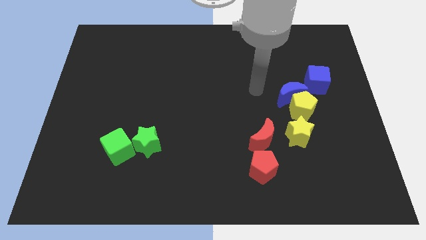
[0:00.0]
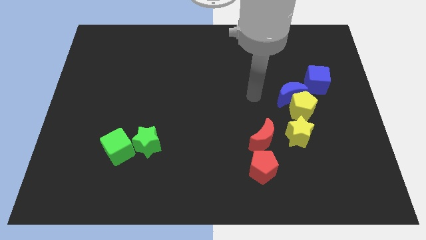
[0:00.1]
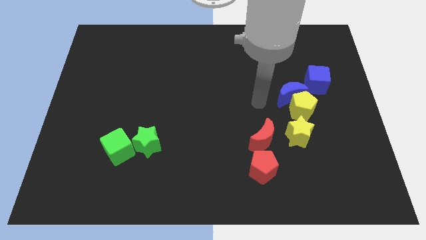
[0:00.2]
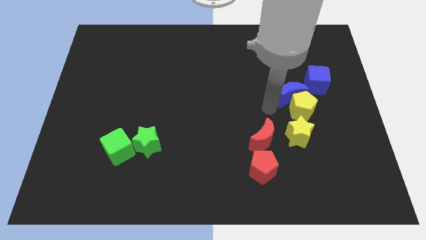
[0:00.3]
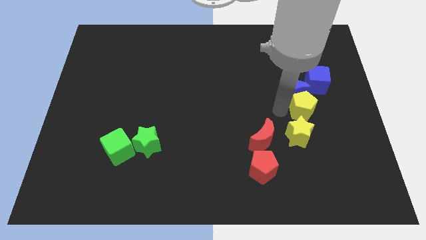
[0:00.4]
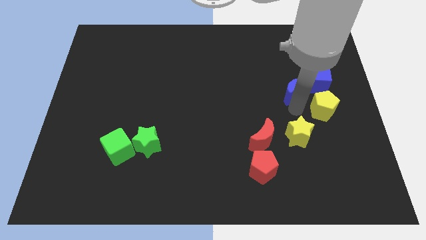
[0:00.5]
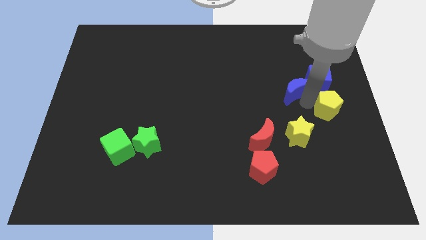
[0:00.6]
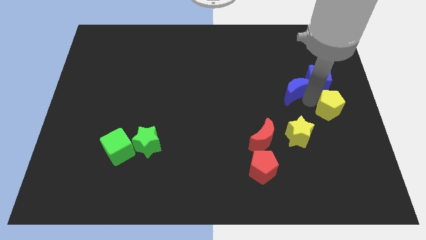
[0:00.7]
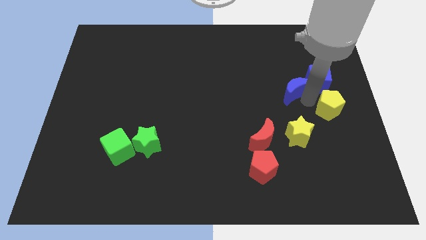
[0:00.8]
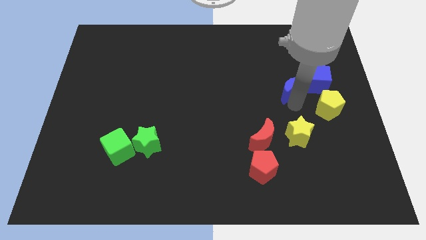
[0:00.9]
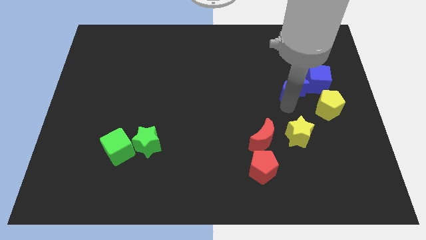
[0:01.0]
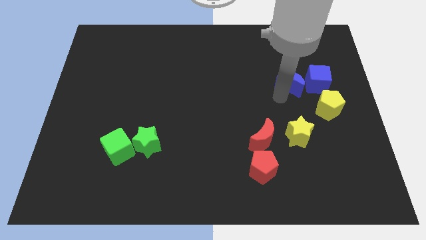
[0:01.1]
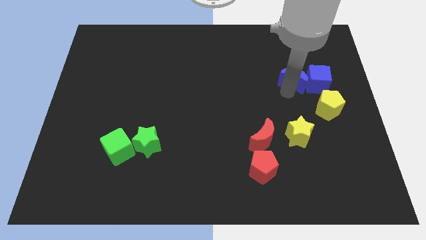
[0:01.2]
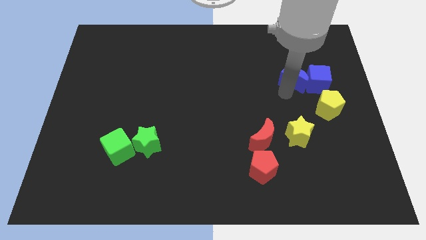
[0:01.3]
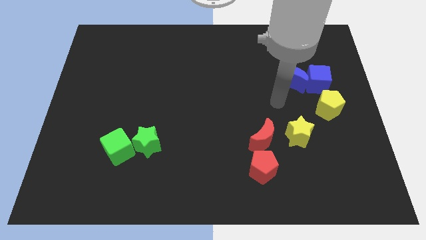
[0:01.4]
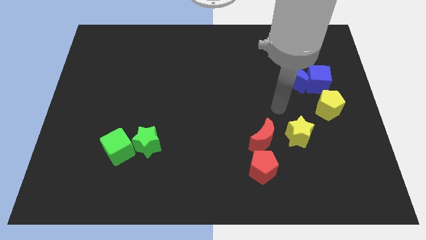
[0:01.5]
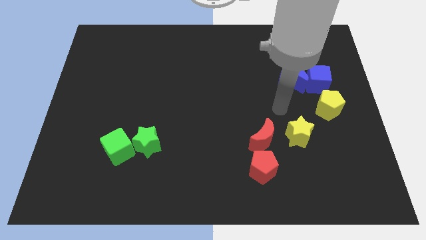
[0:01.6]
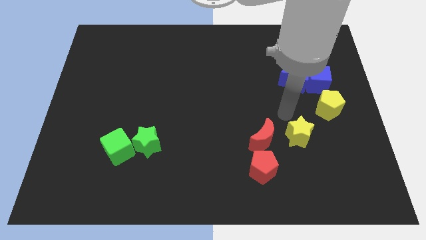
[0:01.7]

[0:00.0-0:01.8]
separate both yellow pentagon and blue crescent from each other

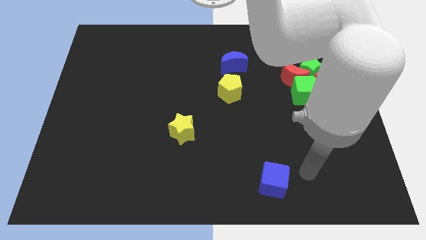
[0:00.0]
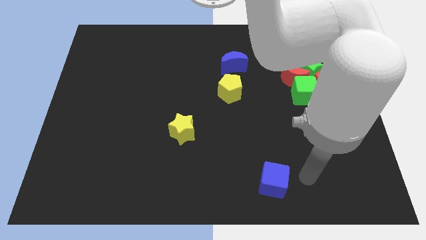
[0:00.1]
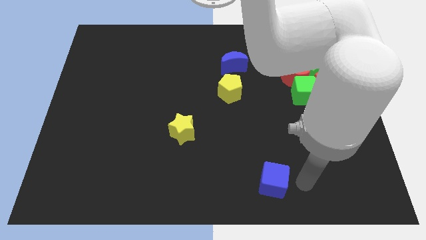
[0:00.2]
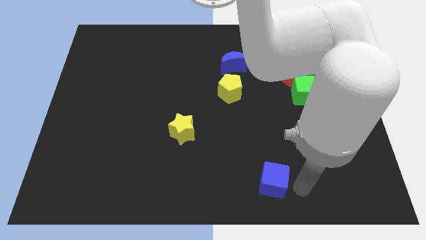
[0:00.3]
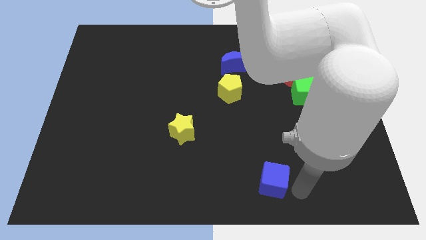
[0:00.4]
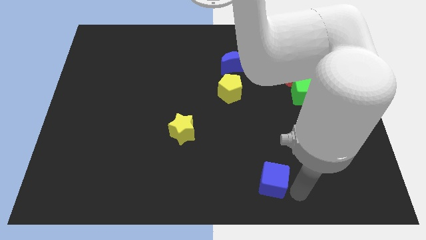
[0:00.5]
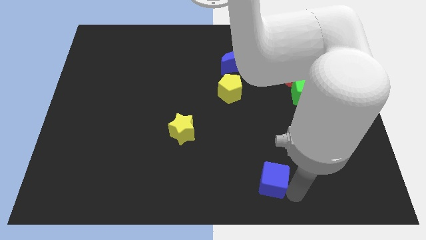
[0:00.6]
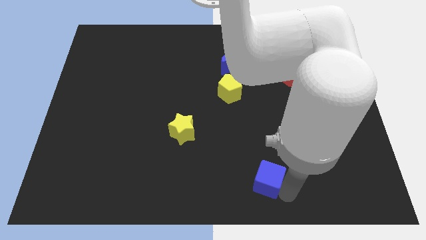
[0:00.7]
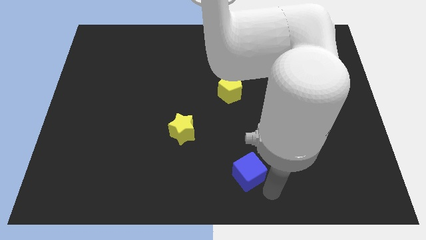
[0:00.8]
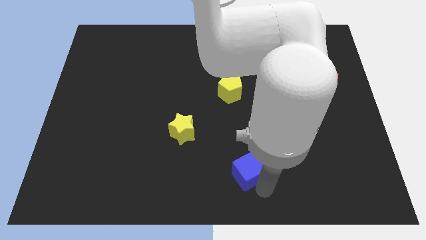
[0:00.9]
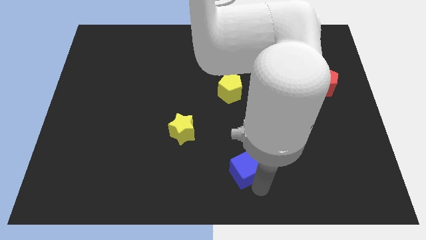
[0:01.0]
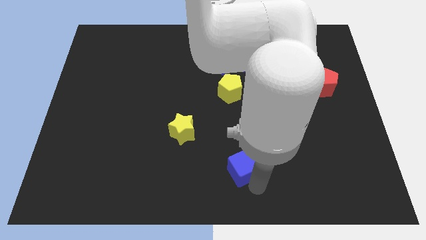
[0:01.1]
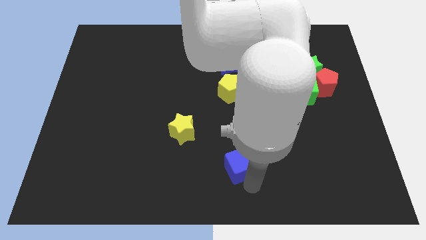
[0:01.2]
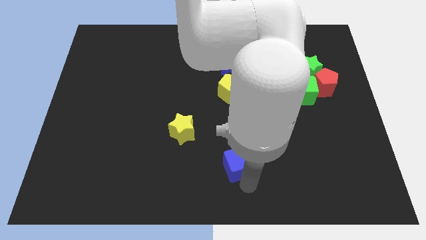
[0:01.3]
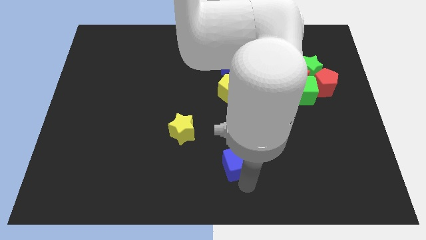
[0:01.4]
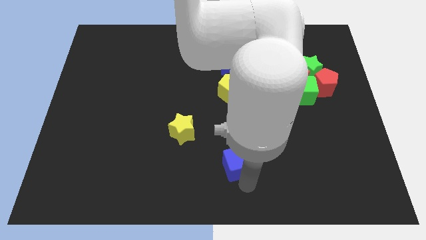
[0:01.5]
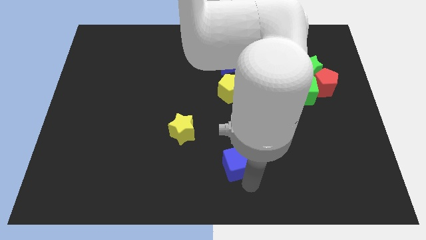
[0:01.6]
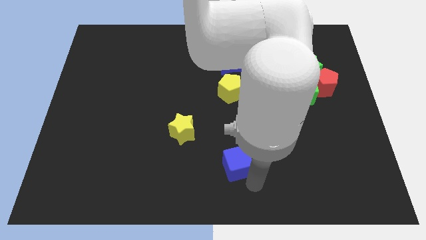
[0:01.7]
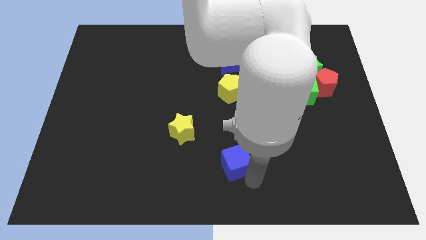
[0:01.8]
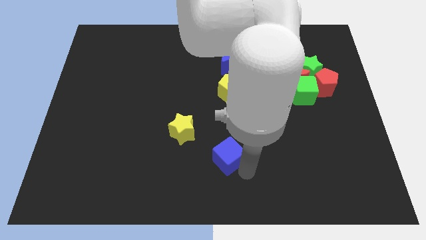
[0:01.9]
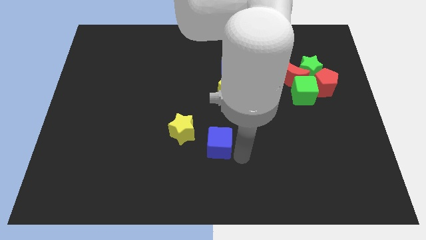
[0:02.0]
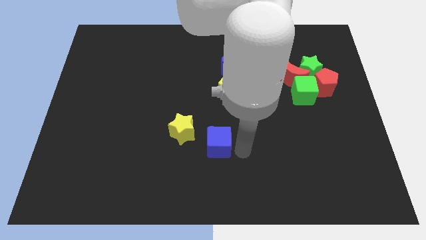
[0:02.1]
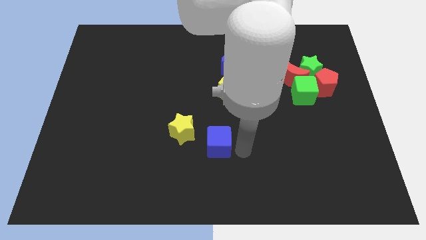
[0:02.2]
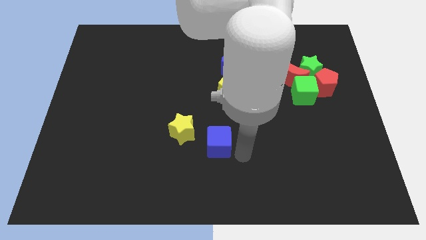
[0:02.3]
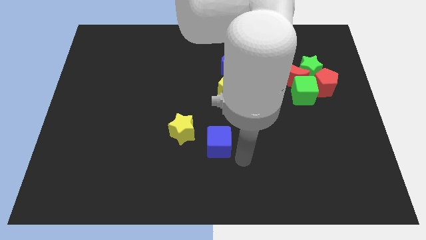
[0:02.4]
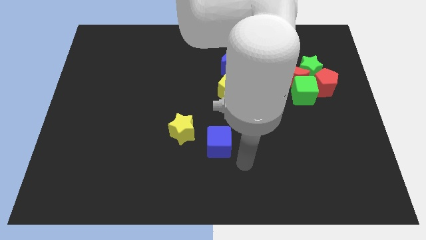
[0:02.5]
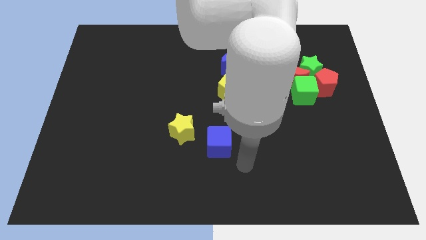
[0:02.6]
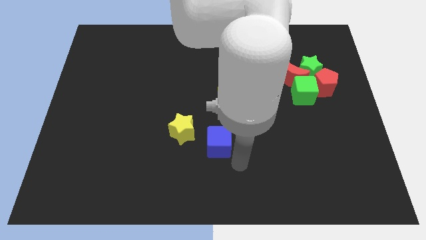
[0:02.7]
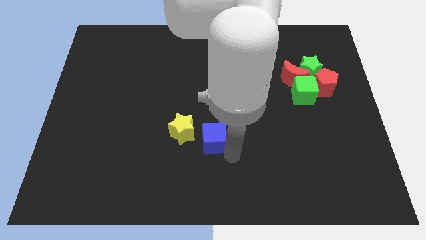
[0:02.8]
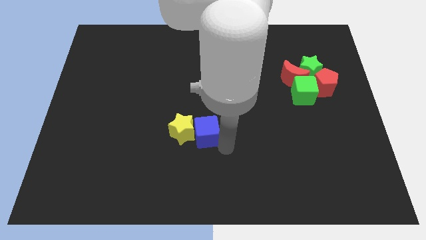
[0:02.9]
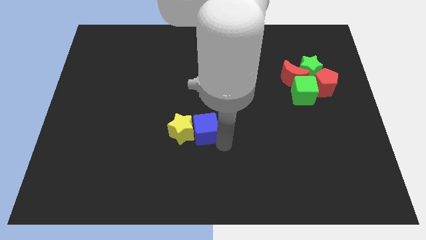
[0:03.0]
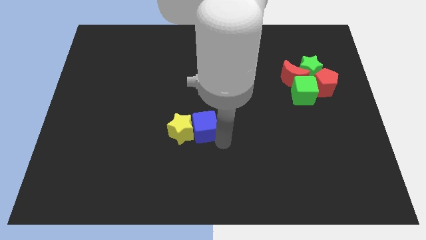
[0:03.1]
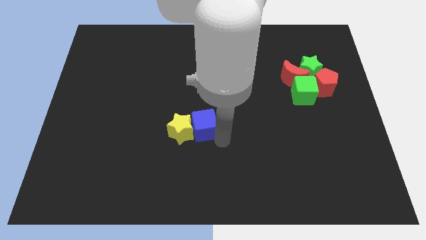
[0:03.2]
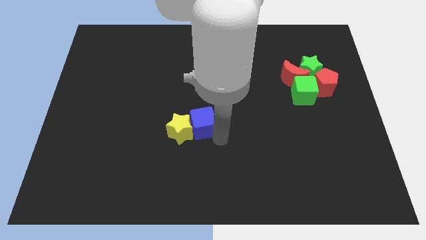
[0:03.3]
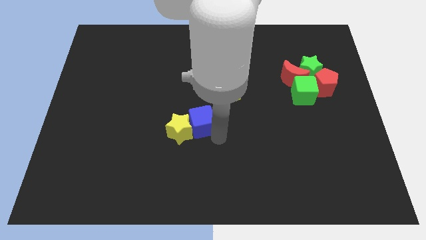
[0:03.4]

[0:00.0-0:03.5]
move the blue cube into yellow star to the right

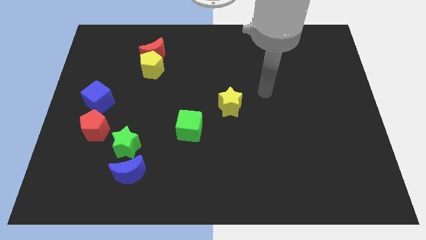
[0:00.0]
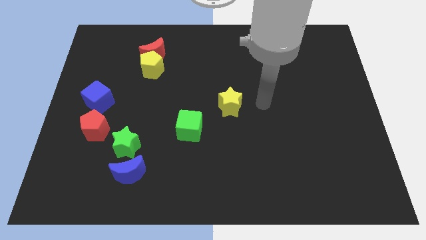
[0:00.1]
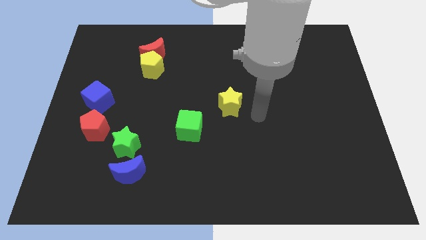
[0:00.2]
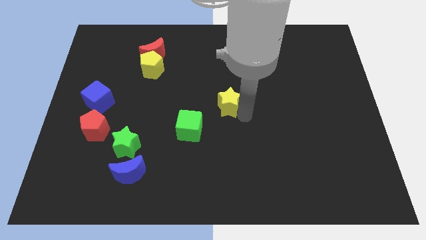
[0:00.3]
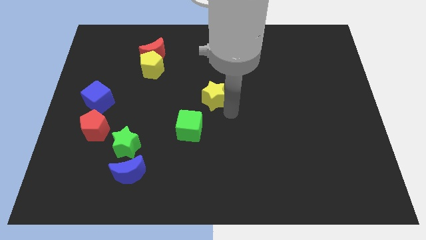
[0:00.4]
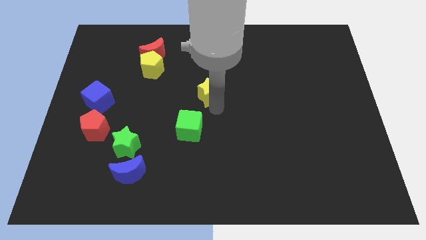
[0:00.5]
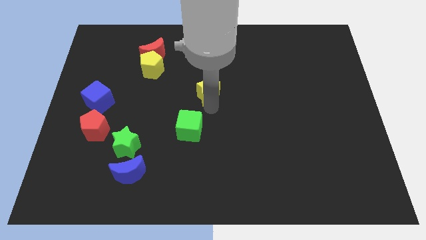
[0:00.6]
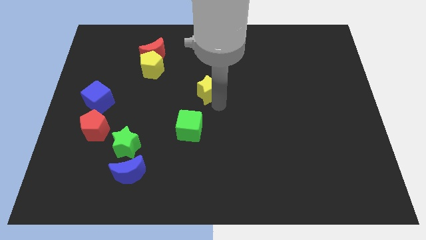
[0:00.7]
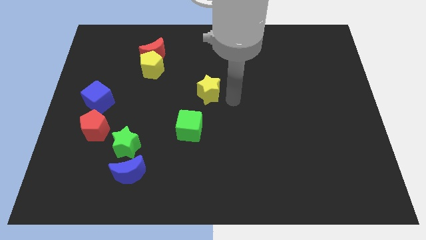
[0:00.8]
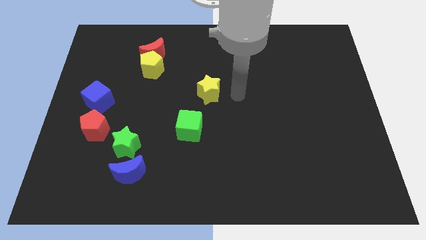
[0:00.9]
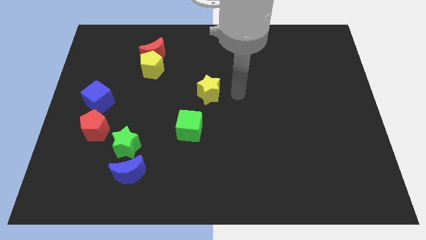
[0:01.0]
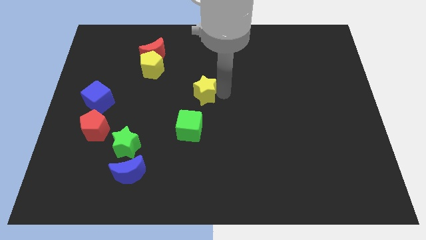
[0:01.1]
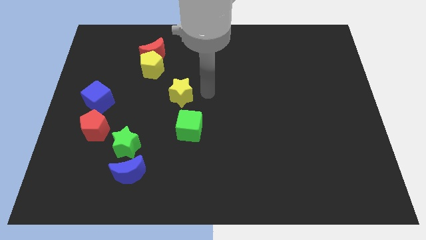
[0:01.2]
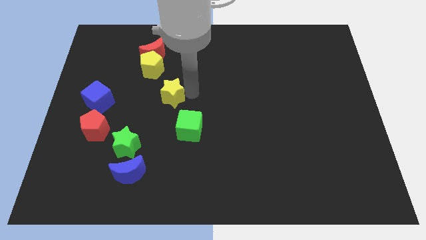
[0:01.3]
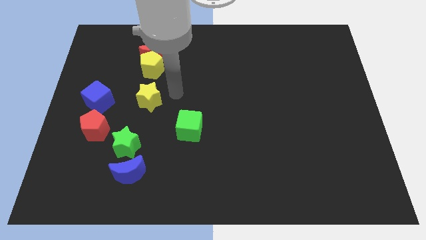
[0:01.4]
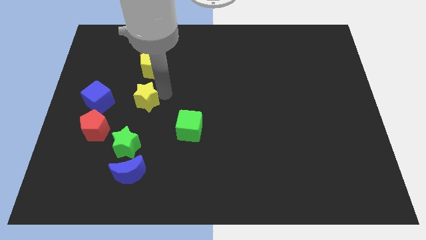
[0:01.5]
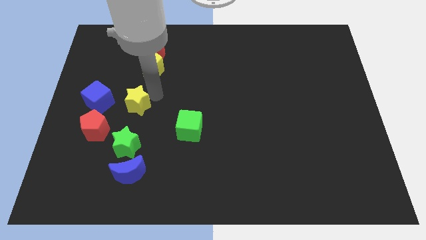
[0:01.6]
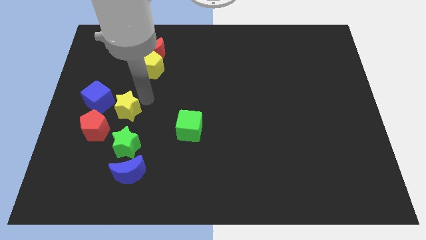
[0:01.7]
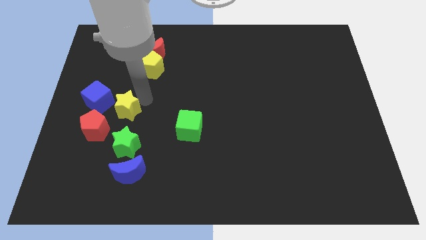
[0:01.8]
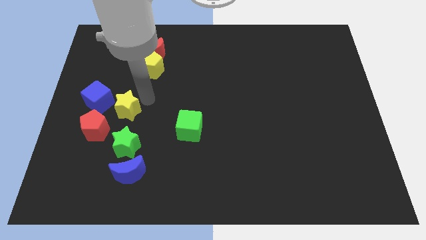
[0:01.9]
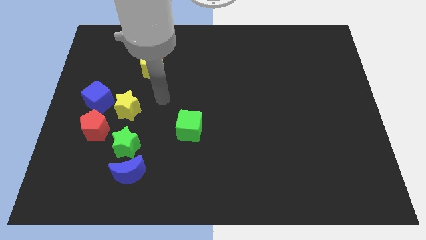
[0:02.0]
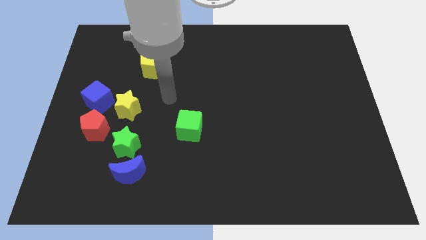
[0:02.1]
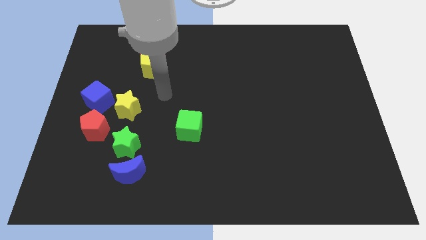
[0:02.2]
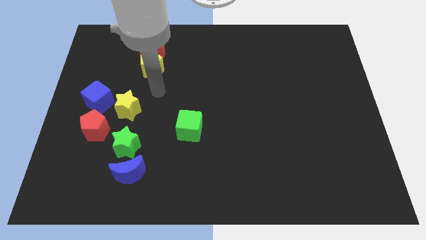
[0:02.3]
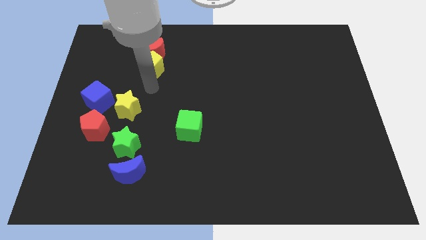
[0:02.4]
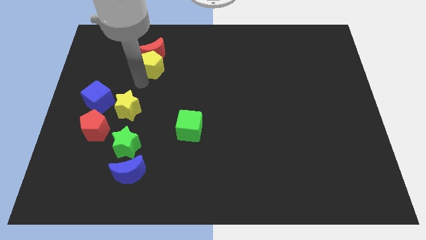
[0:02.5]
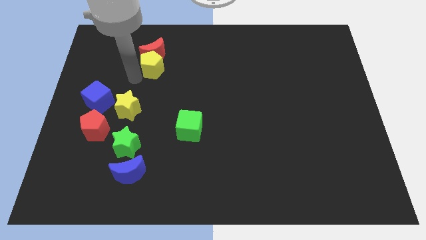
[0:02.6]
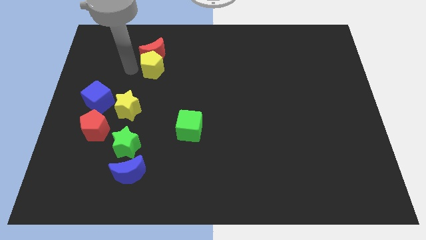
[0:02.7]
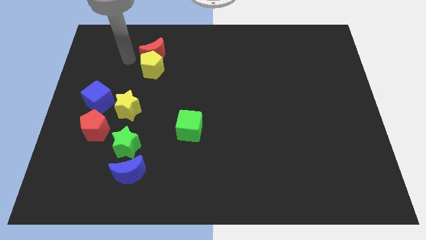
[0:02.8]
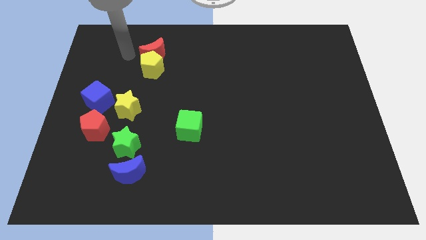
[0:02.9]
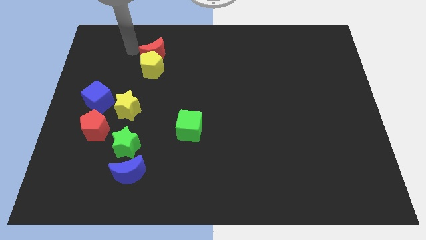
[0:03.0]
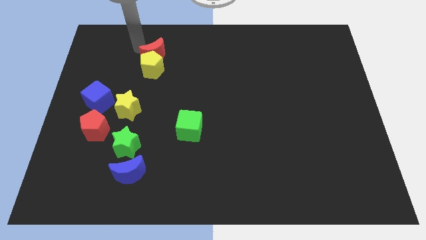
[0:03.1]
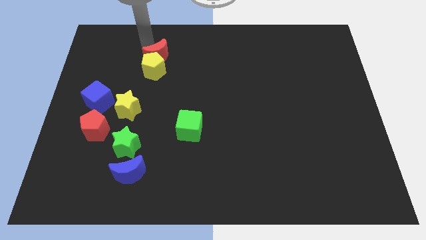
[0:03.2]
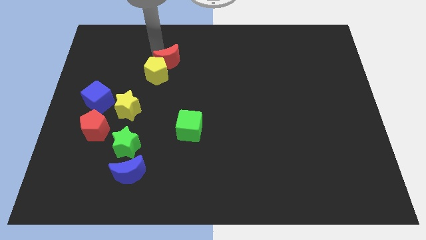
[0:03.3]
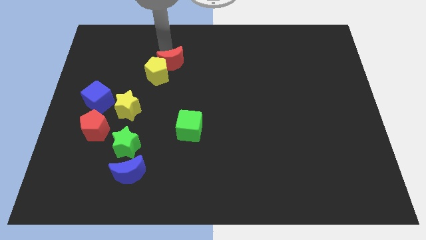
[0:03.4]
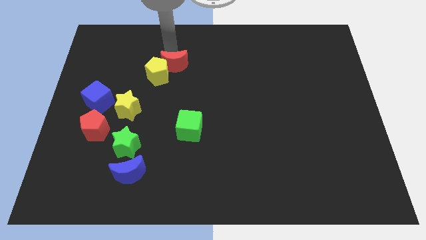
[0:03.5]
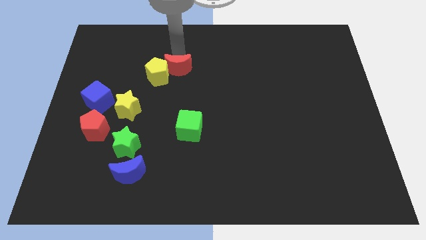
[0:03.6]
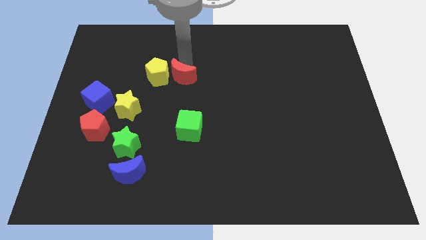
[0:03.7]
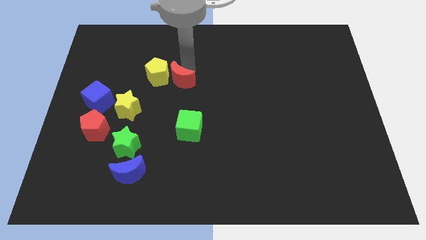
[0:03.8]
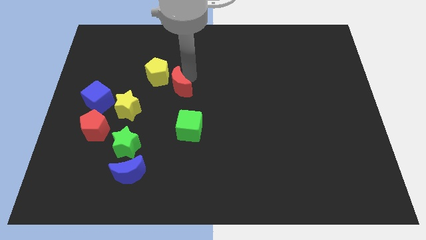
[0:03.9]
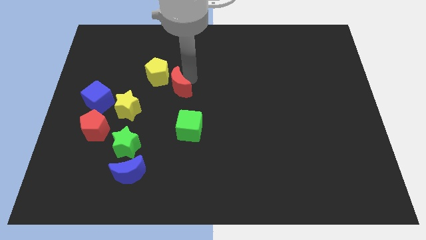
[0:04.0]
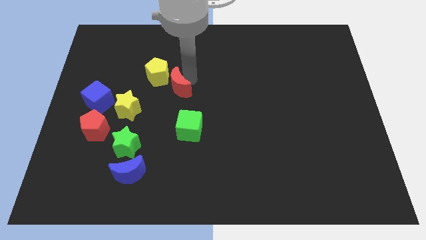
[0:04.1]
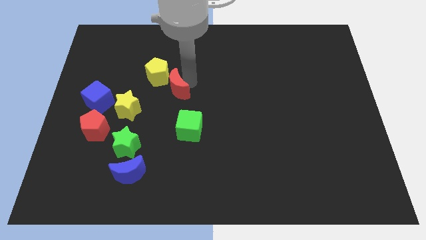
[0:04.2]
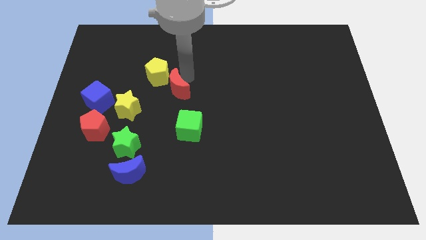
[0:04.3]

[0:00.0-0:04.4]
move yellow star right to blue cube
